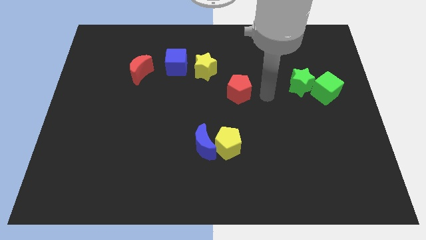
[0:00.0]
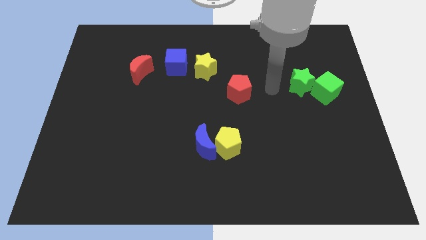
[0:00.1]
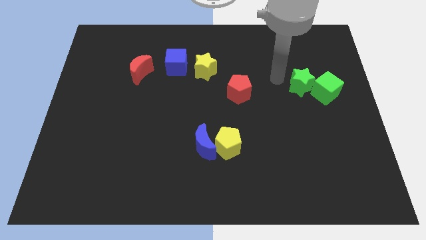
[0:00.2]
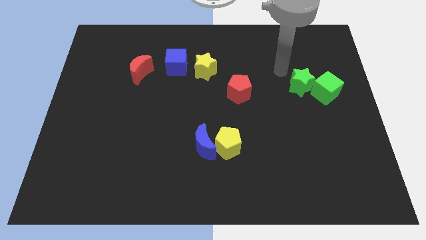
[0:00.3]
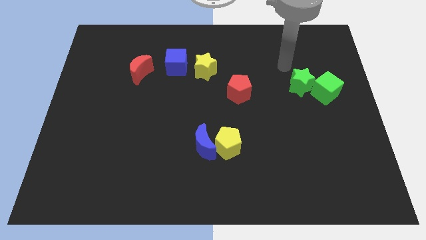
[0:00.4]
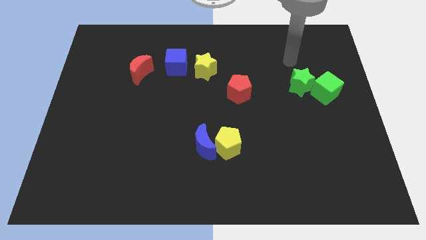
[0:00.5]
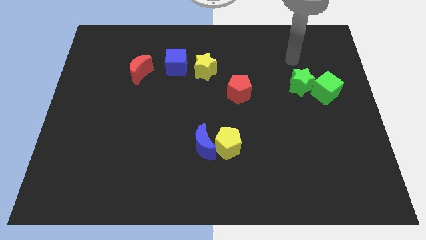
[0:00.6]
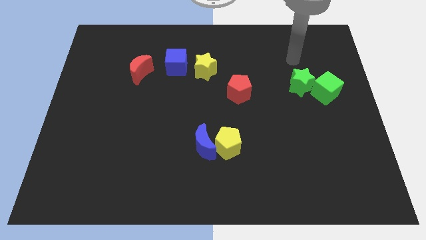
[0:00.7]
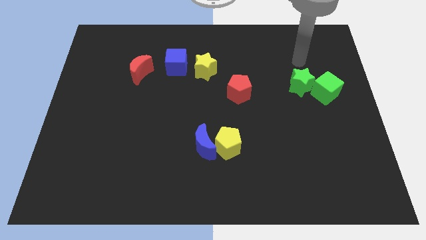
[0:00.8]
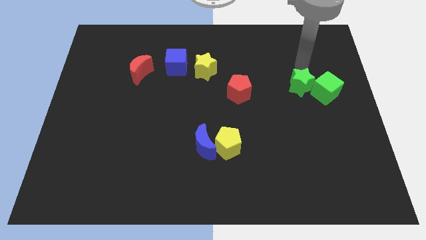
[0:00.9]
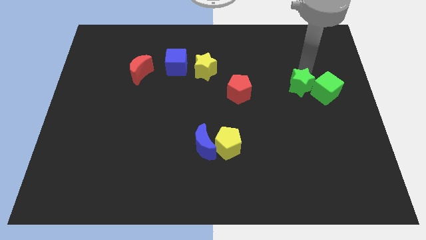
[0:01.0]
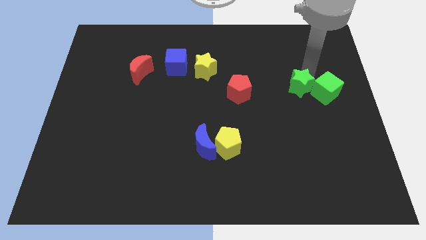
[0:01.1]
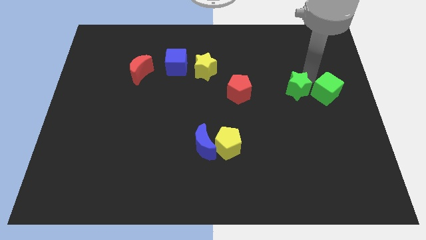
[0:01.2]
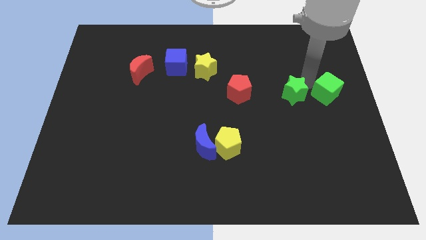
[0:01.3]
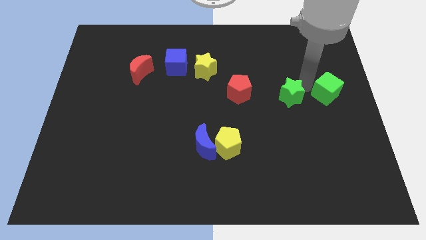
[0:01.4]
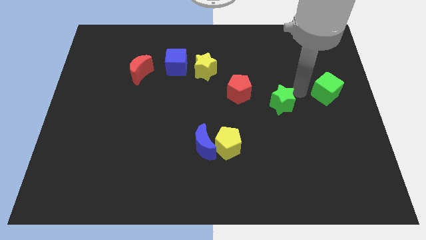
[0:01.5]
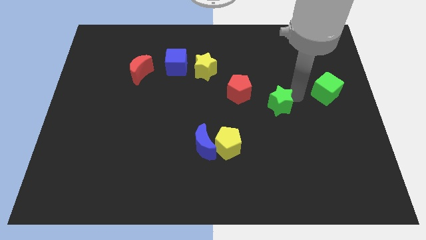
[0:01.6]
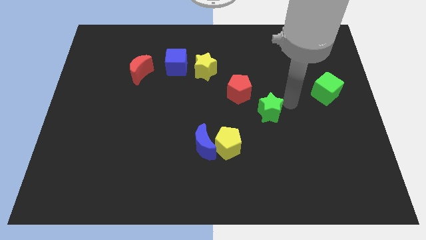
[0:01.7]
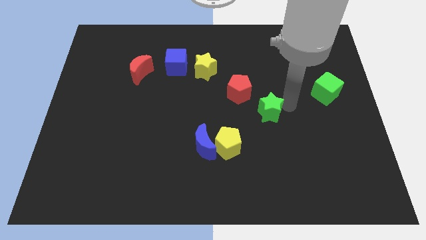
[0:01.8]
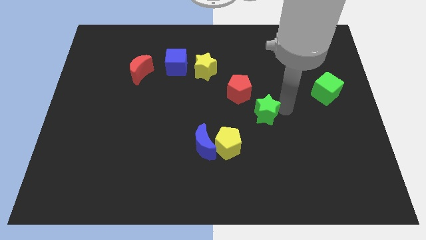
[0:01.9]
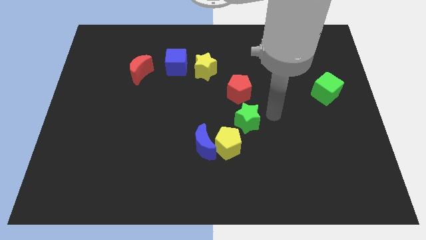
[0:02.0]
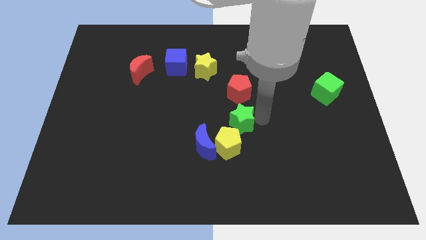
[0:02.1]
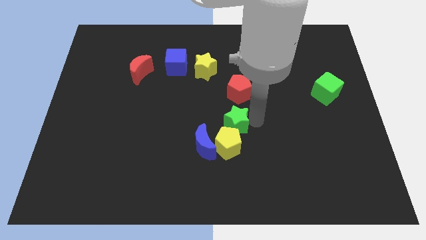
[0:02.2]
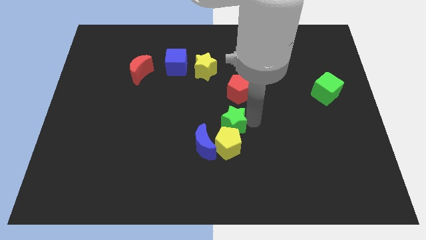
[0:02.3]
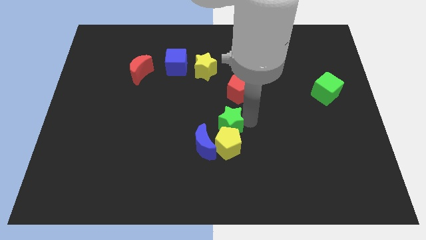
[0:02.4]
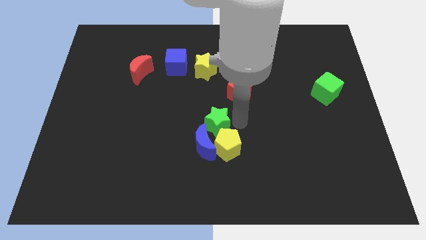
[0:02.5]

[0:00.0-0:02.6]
move the green star into the yellow pentagon

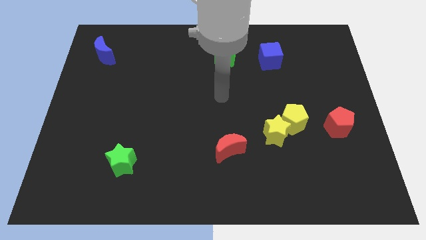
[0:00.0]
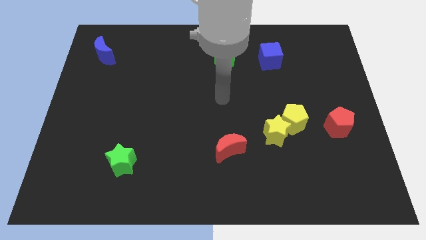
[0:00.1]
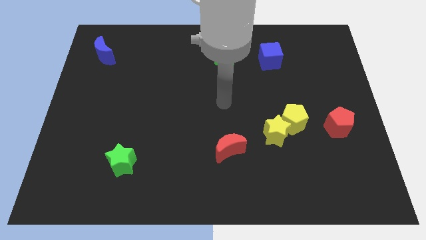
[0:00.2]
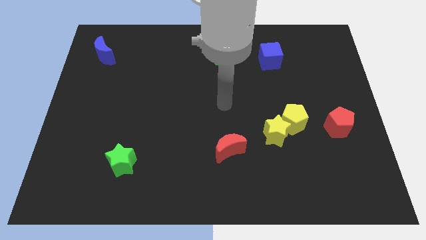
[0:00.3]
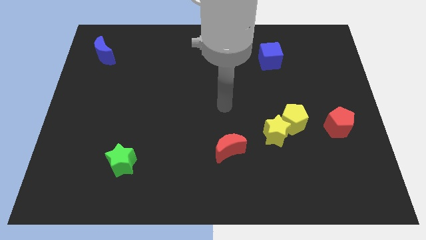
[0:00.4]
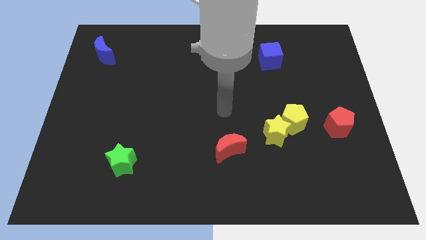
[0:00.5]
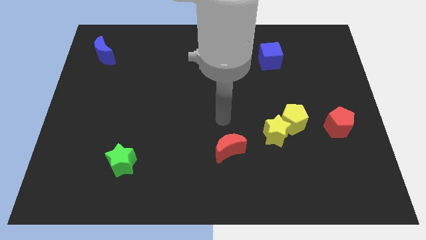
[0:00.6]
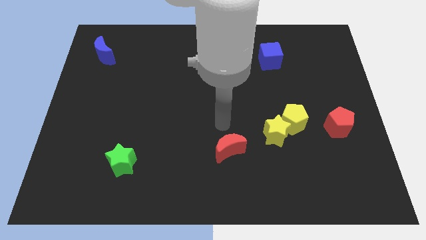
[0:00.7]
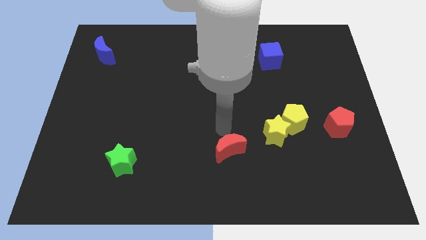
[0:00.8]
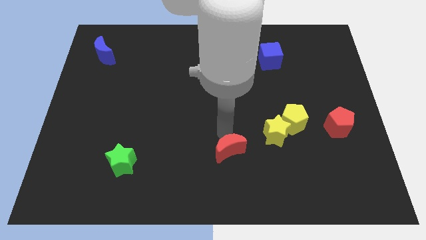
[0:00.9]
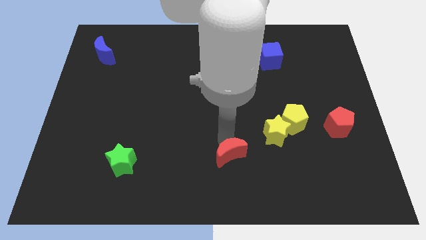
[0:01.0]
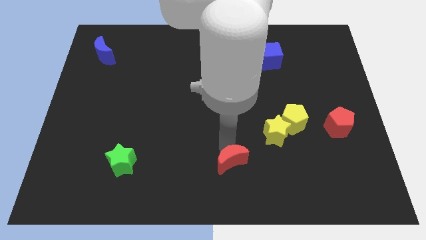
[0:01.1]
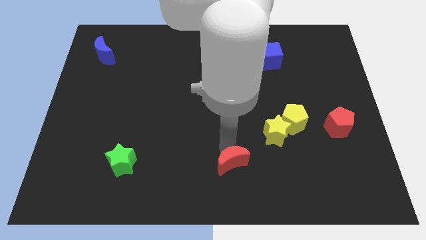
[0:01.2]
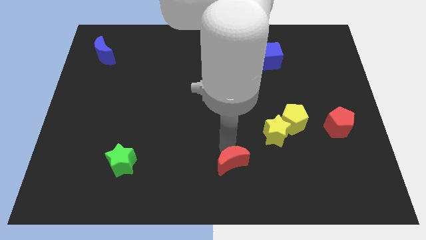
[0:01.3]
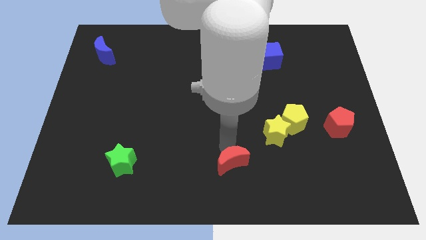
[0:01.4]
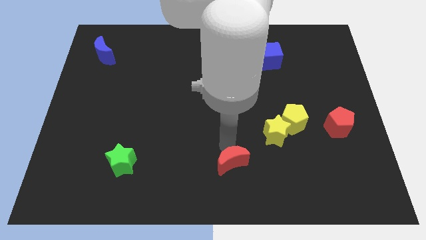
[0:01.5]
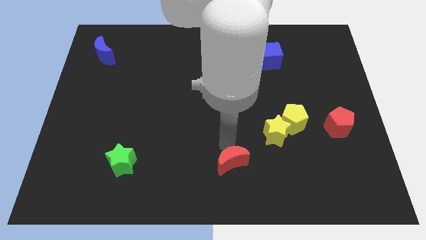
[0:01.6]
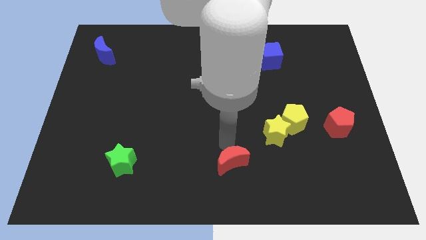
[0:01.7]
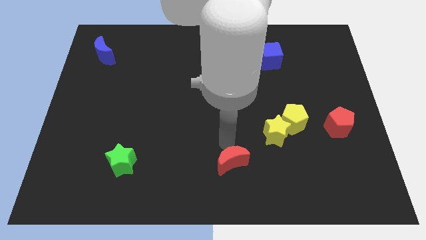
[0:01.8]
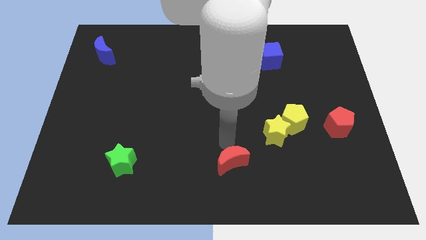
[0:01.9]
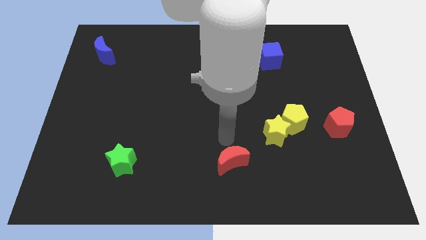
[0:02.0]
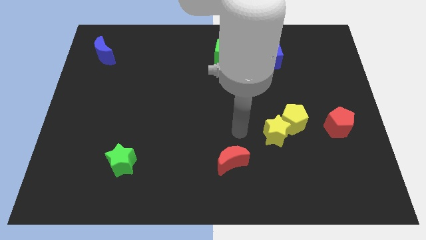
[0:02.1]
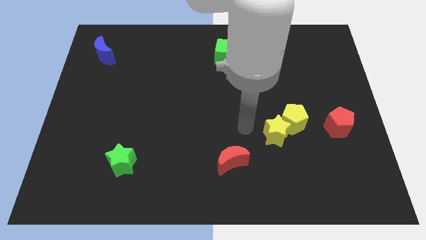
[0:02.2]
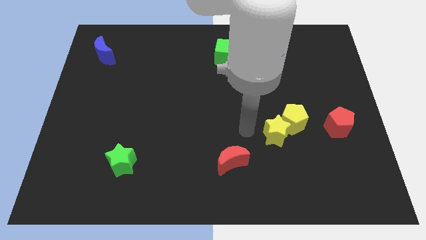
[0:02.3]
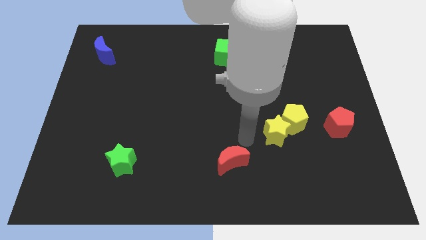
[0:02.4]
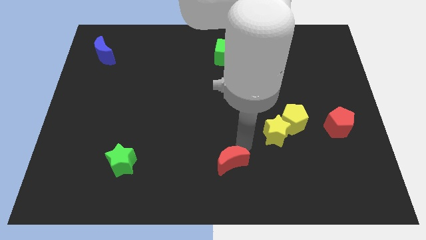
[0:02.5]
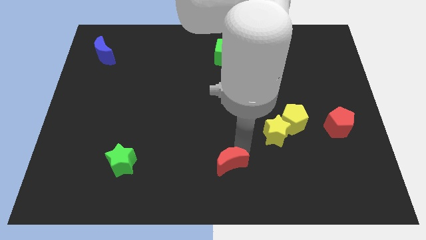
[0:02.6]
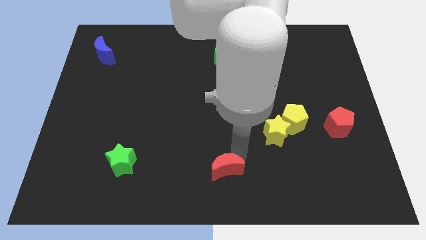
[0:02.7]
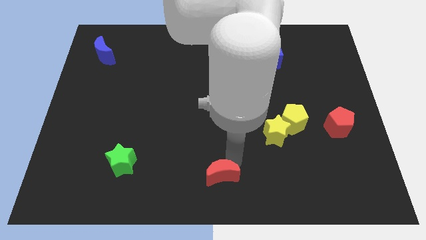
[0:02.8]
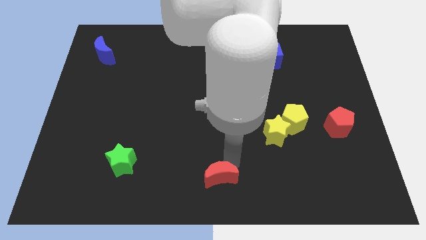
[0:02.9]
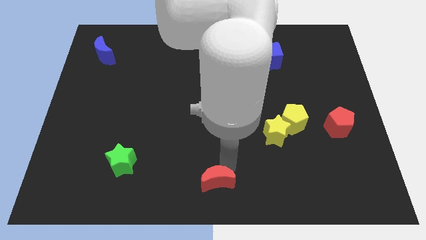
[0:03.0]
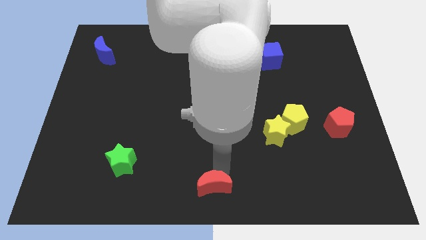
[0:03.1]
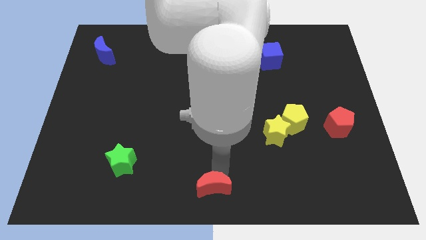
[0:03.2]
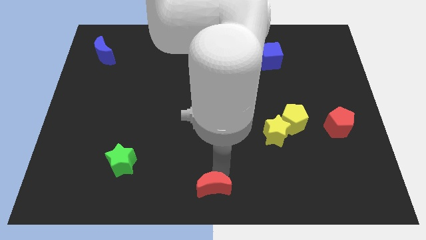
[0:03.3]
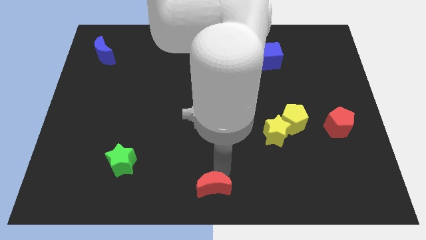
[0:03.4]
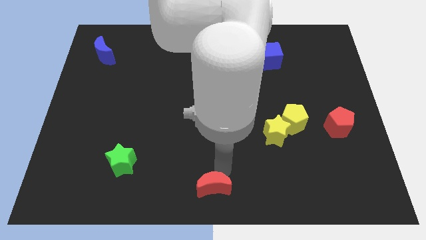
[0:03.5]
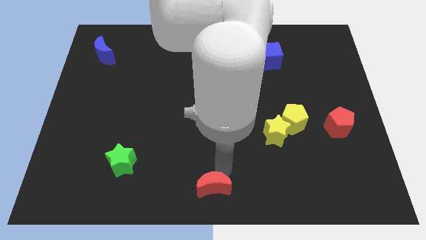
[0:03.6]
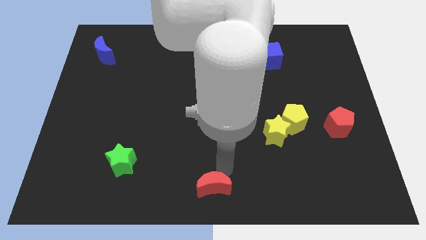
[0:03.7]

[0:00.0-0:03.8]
move red crescent to the bottom center of the board

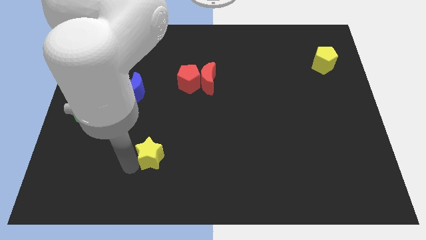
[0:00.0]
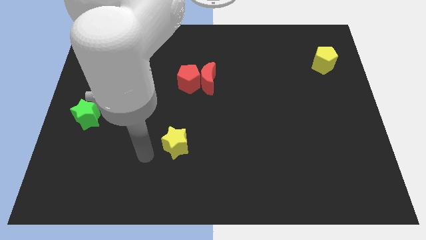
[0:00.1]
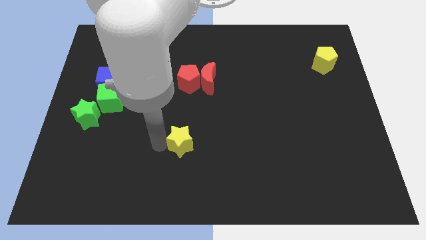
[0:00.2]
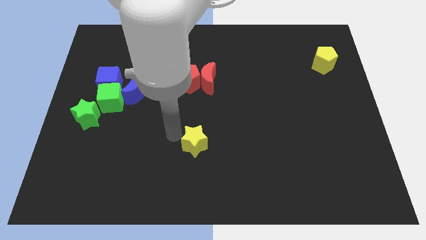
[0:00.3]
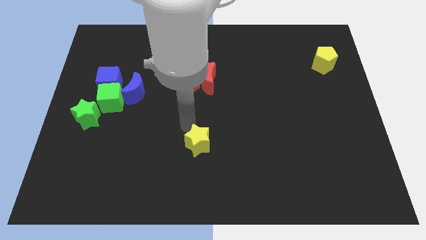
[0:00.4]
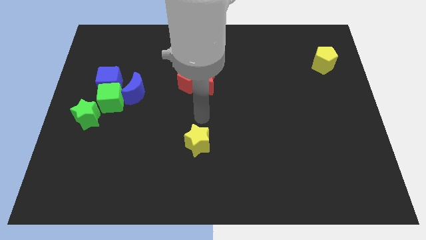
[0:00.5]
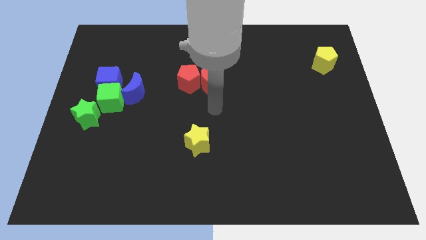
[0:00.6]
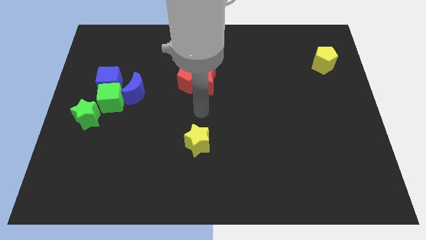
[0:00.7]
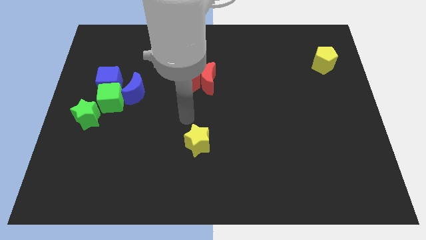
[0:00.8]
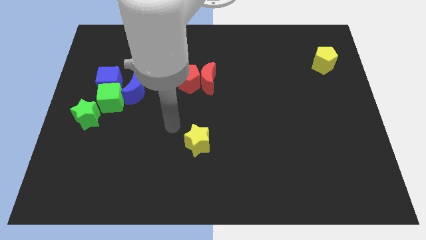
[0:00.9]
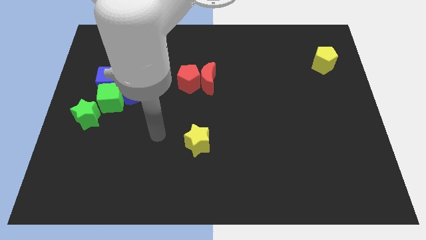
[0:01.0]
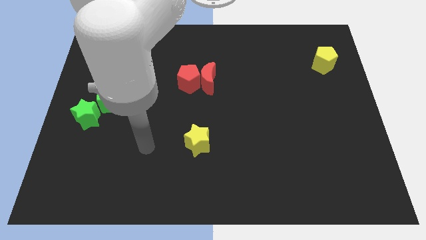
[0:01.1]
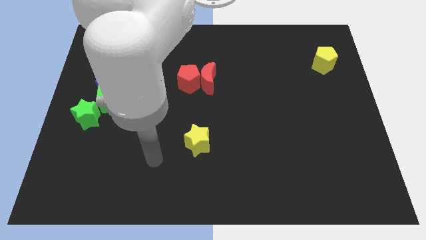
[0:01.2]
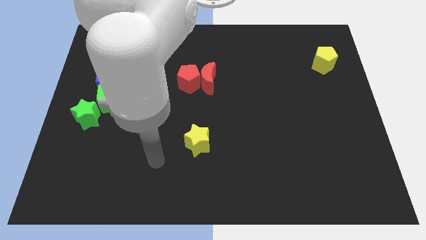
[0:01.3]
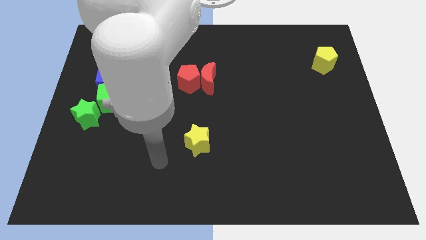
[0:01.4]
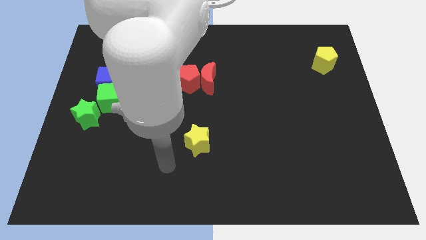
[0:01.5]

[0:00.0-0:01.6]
place the yellow star vertically below the red pentagon

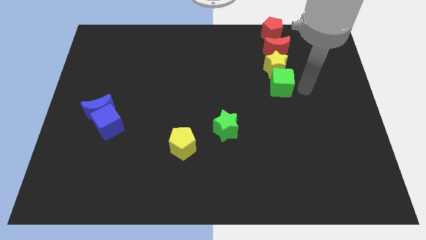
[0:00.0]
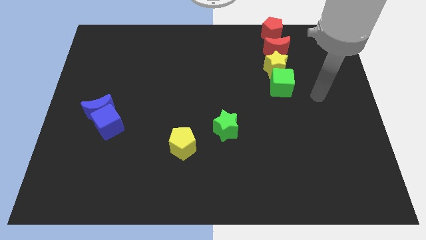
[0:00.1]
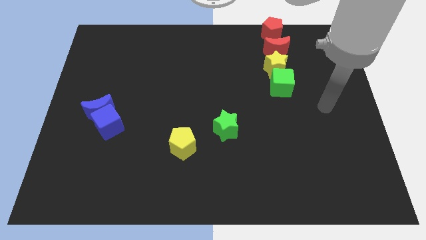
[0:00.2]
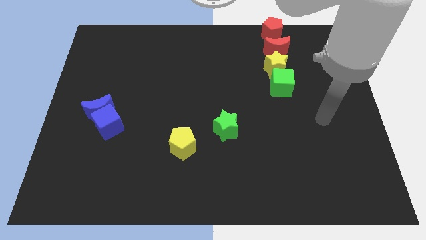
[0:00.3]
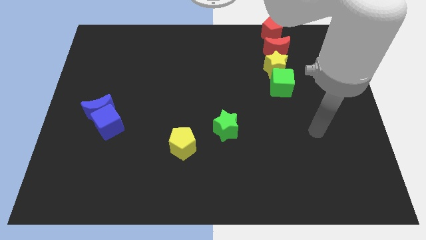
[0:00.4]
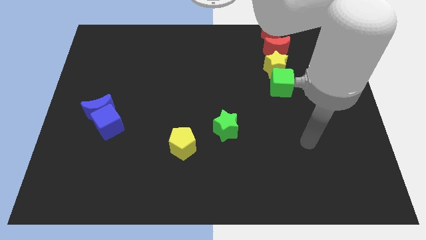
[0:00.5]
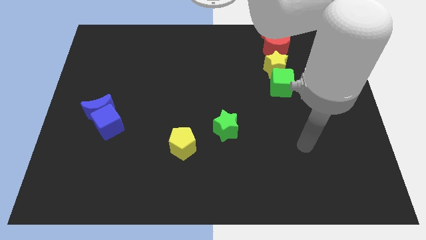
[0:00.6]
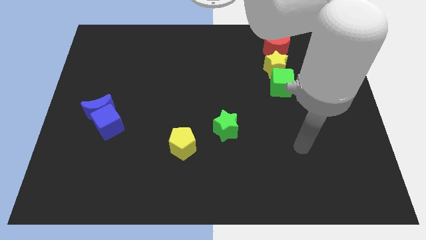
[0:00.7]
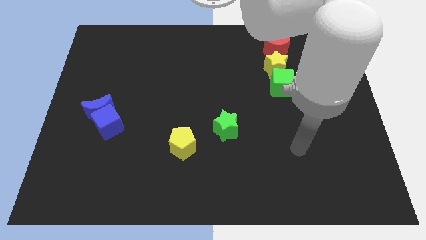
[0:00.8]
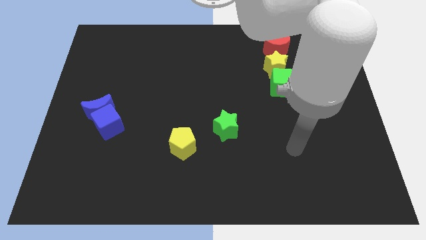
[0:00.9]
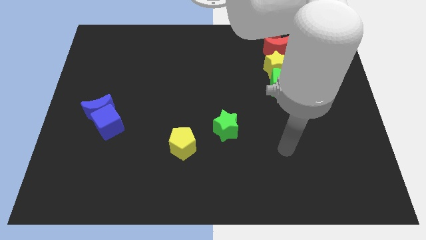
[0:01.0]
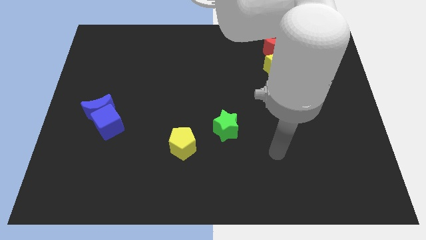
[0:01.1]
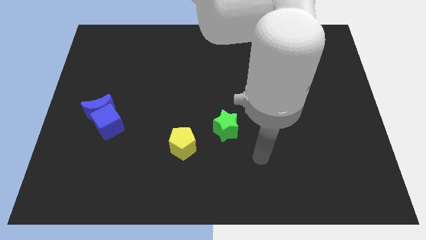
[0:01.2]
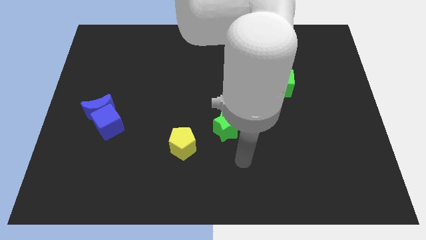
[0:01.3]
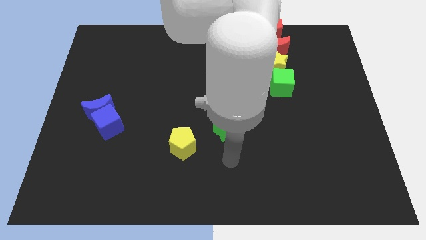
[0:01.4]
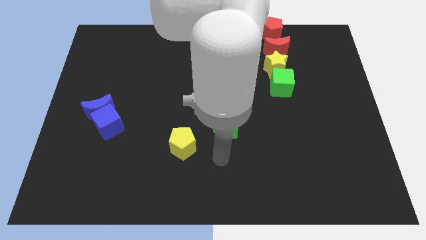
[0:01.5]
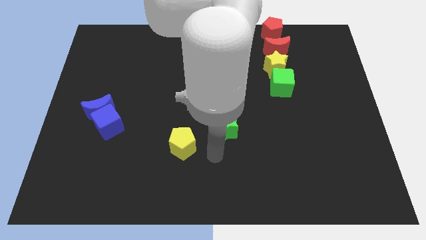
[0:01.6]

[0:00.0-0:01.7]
point your arm at the bottom of the green star
